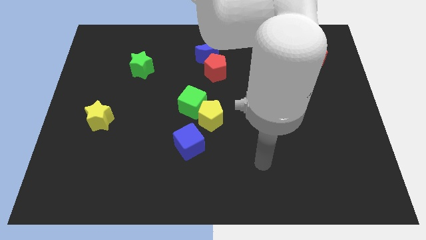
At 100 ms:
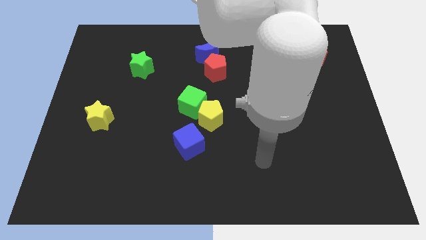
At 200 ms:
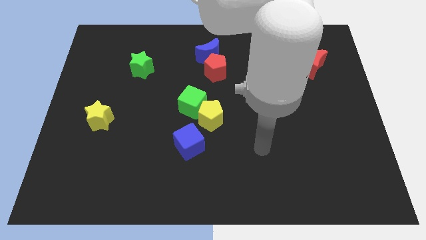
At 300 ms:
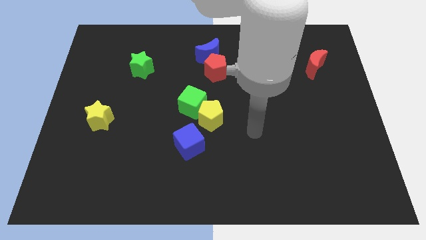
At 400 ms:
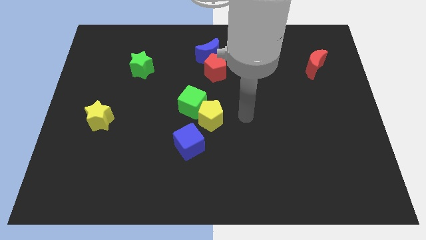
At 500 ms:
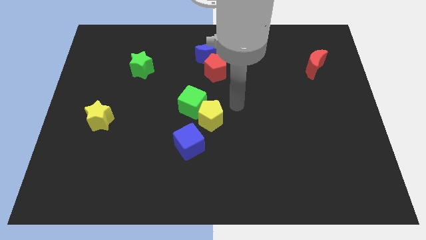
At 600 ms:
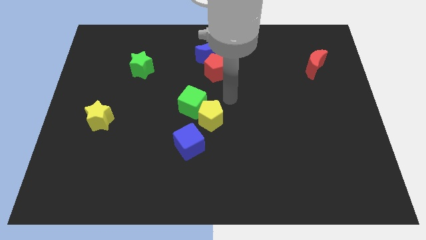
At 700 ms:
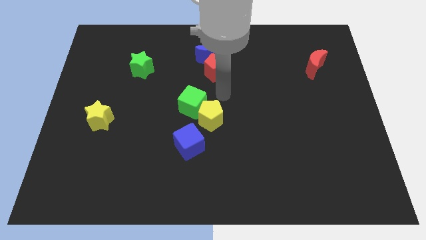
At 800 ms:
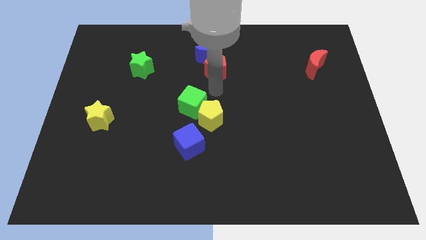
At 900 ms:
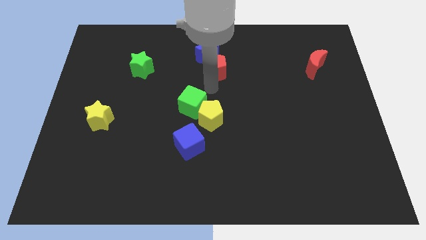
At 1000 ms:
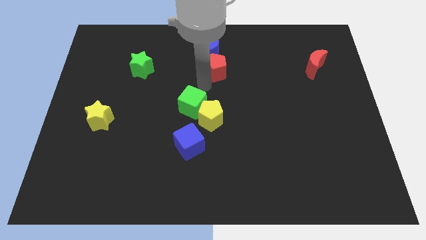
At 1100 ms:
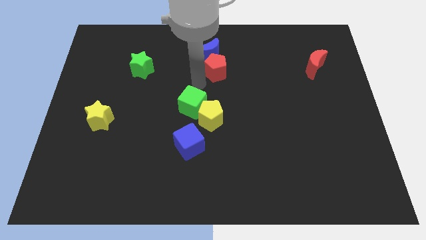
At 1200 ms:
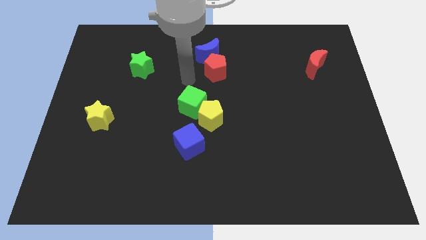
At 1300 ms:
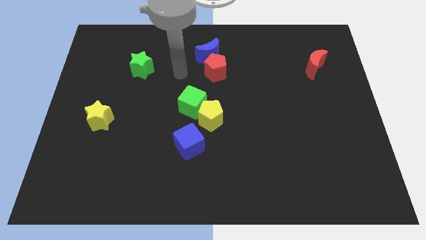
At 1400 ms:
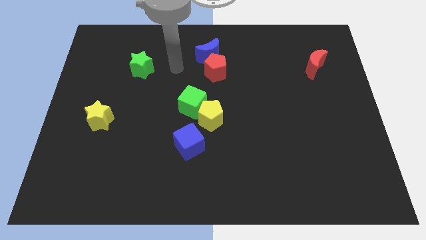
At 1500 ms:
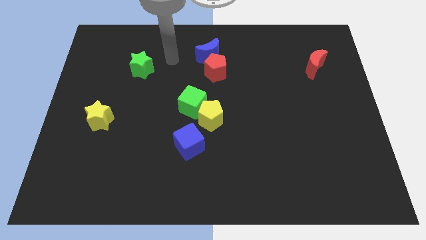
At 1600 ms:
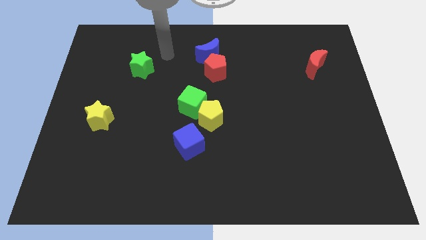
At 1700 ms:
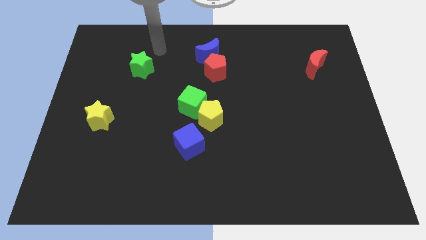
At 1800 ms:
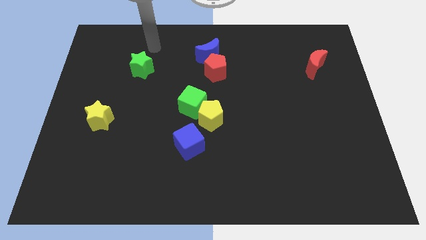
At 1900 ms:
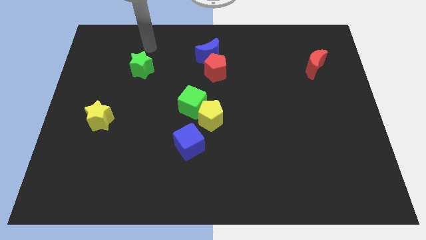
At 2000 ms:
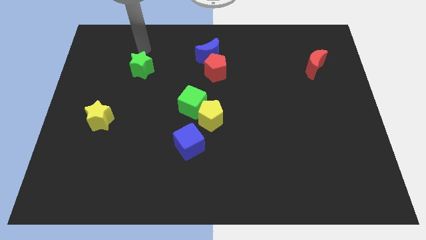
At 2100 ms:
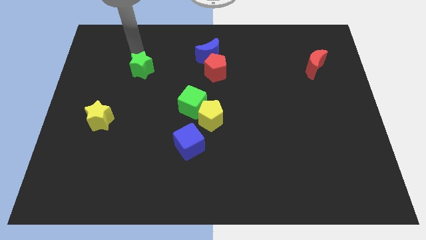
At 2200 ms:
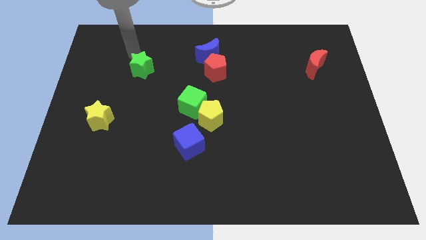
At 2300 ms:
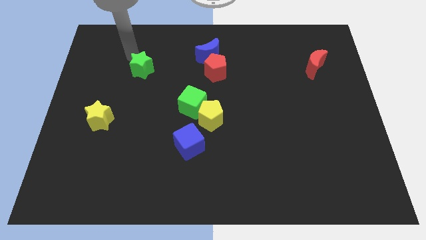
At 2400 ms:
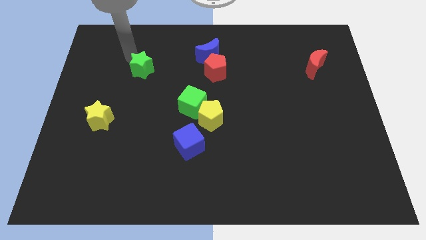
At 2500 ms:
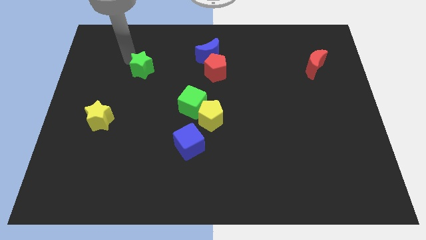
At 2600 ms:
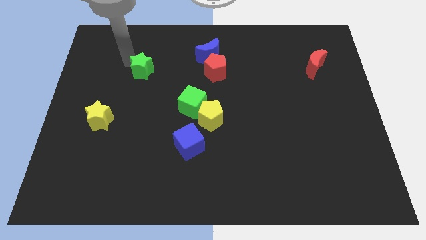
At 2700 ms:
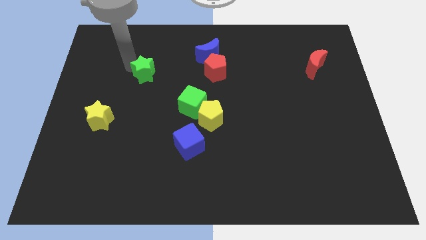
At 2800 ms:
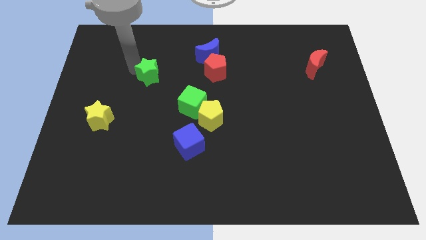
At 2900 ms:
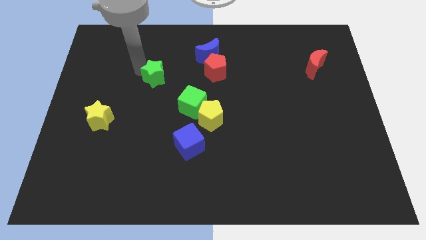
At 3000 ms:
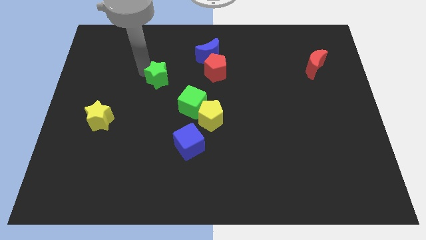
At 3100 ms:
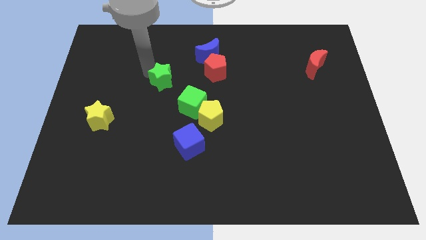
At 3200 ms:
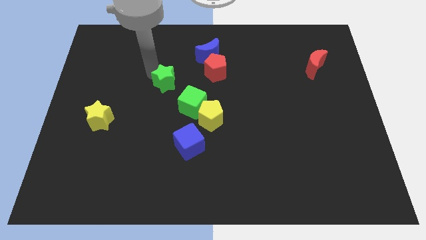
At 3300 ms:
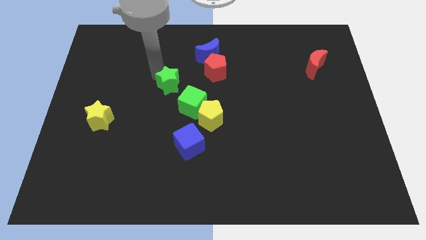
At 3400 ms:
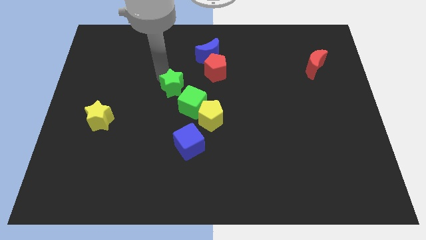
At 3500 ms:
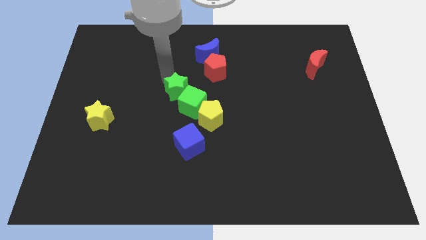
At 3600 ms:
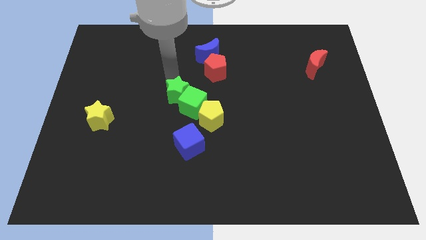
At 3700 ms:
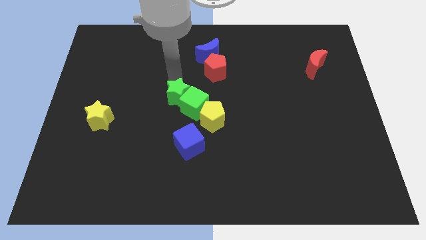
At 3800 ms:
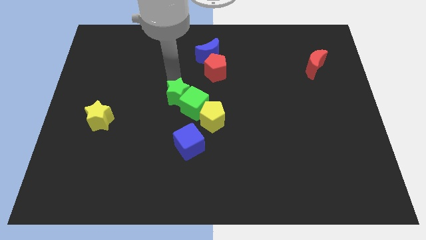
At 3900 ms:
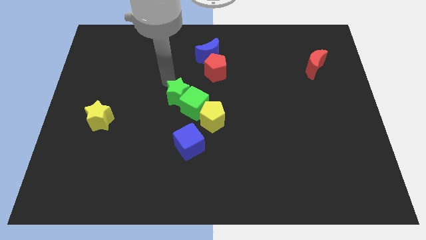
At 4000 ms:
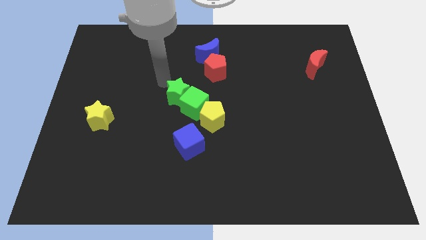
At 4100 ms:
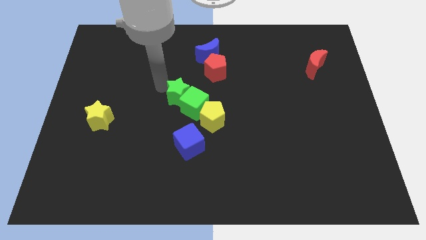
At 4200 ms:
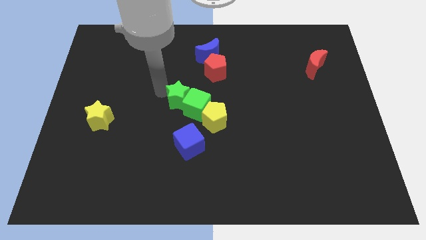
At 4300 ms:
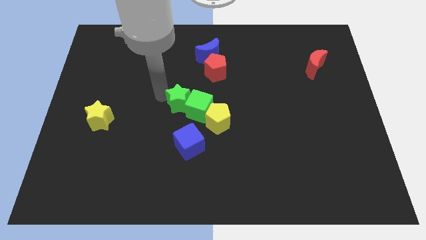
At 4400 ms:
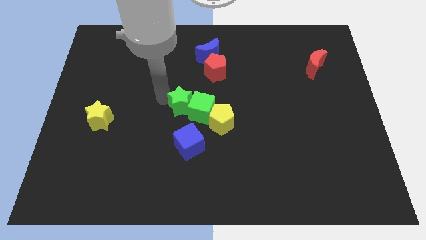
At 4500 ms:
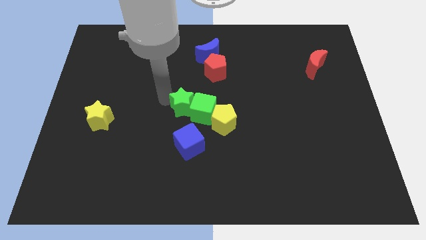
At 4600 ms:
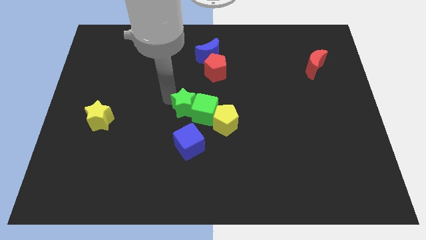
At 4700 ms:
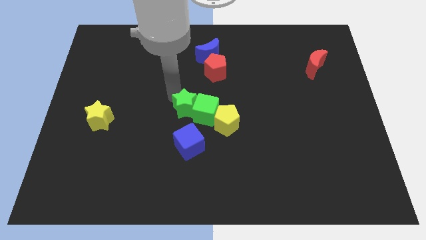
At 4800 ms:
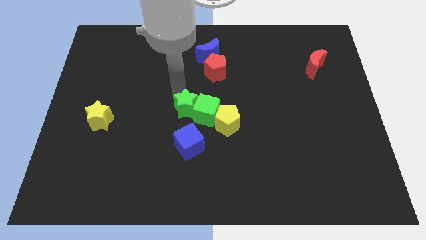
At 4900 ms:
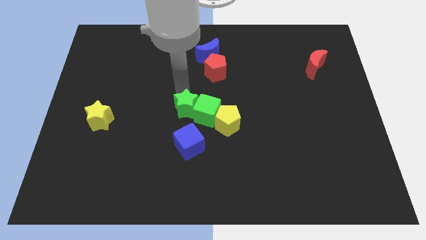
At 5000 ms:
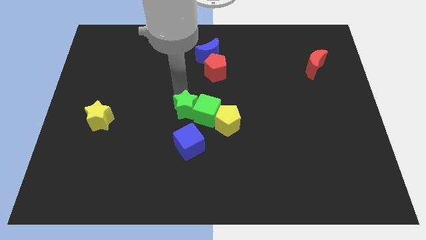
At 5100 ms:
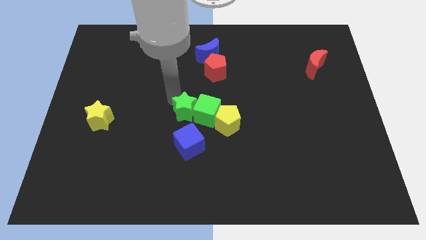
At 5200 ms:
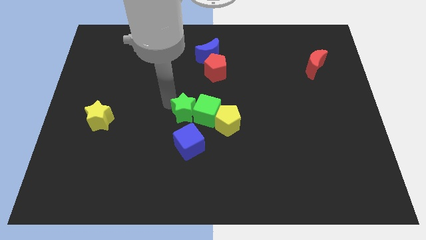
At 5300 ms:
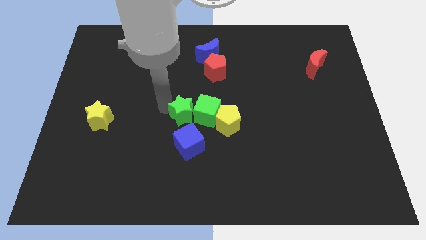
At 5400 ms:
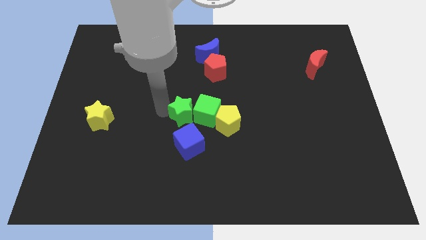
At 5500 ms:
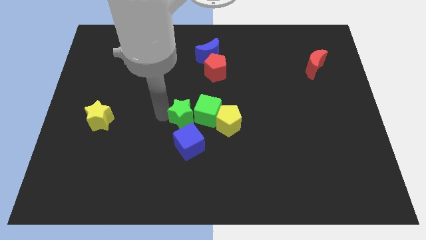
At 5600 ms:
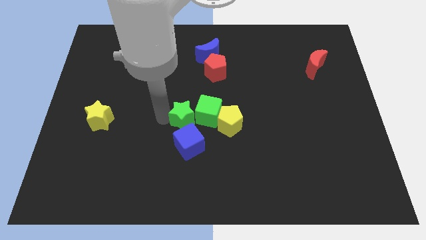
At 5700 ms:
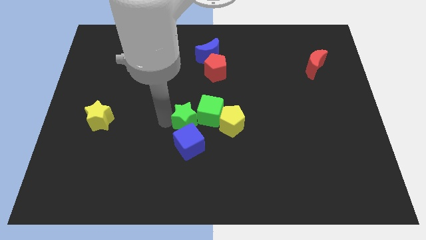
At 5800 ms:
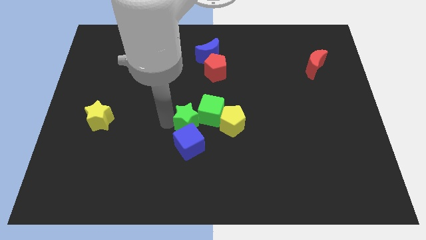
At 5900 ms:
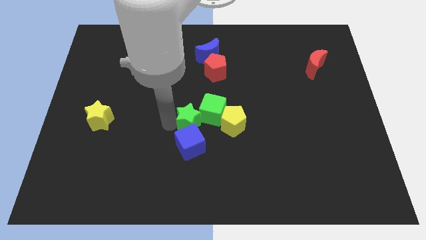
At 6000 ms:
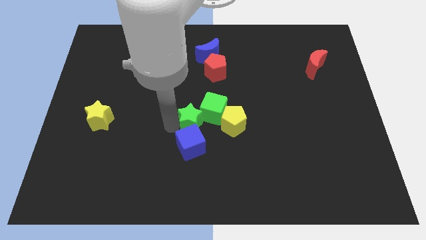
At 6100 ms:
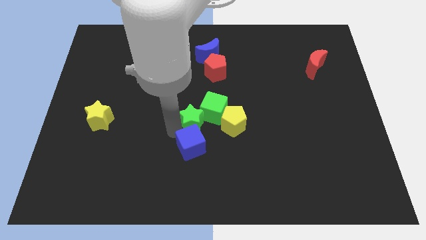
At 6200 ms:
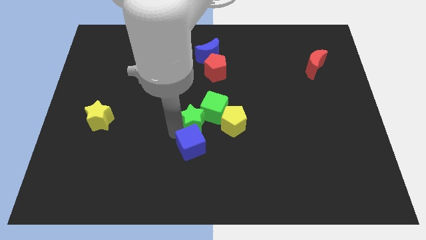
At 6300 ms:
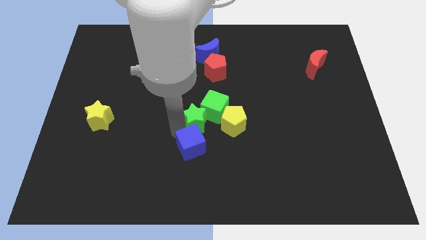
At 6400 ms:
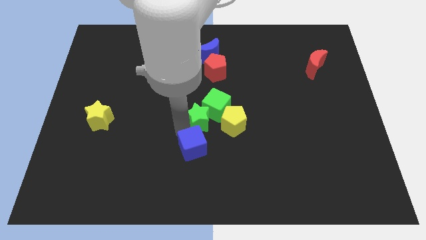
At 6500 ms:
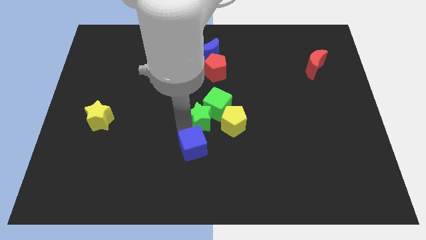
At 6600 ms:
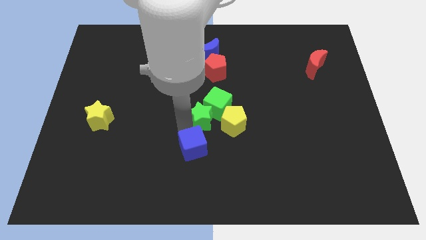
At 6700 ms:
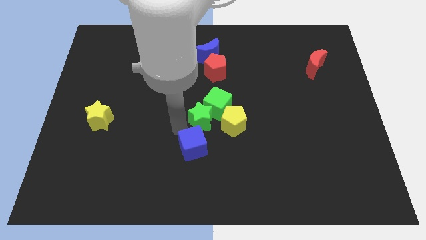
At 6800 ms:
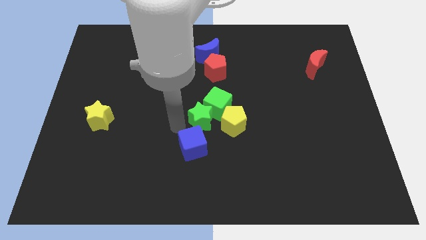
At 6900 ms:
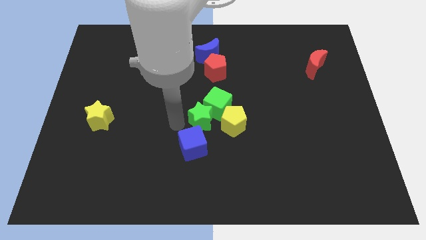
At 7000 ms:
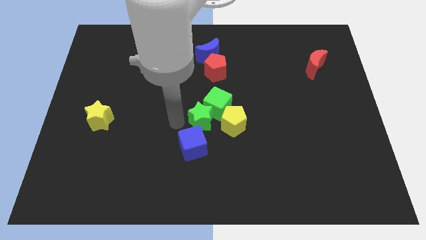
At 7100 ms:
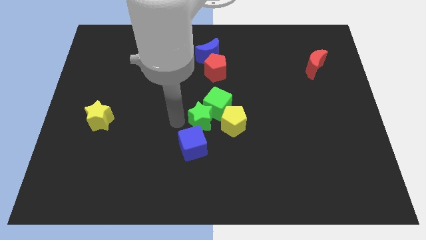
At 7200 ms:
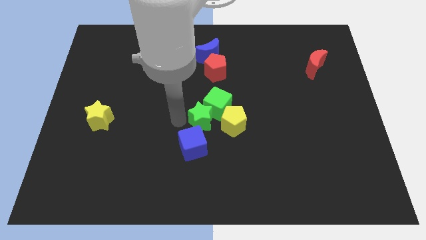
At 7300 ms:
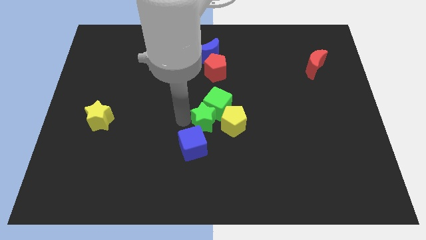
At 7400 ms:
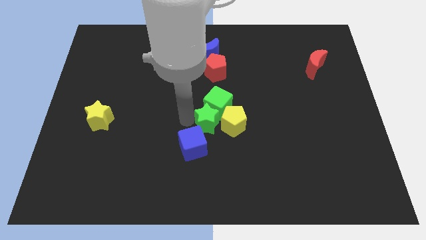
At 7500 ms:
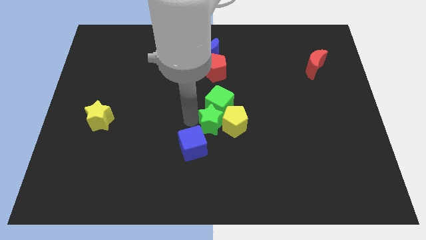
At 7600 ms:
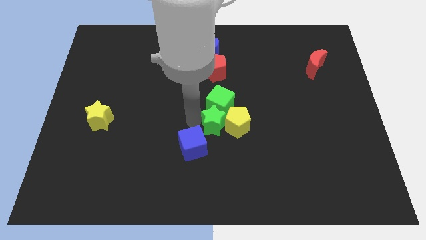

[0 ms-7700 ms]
push the green star next to the yellow pentagon

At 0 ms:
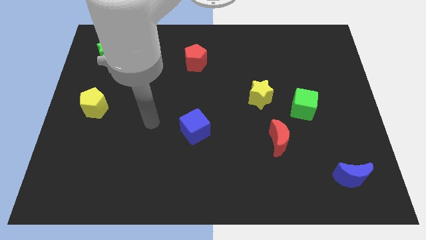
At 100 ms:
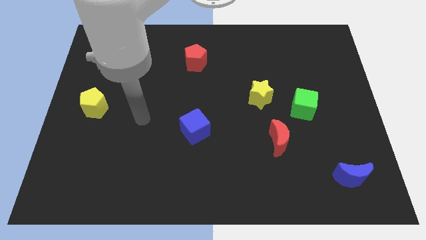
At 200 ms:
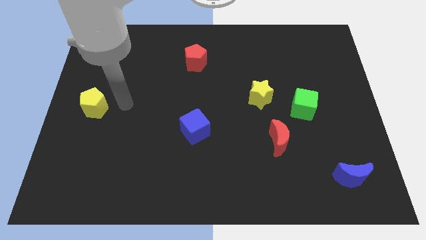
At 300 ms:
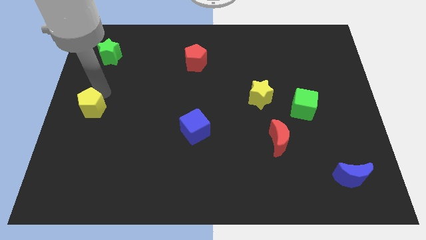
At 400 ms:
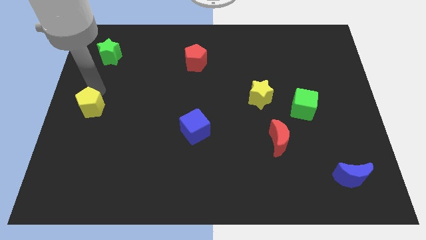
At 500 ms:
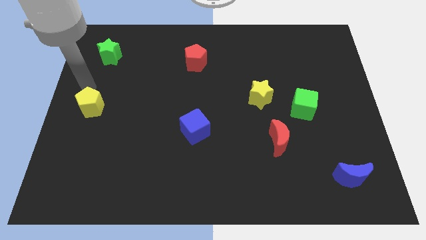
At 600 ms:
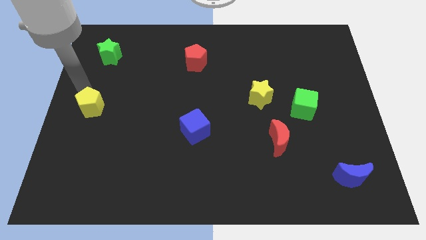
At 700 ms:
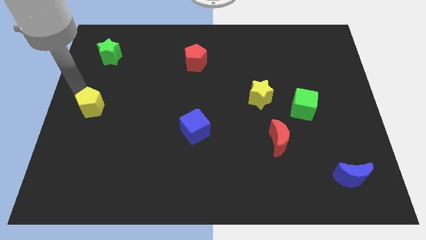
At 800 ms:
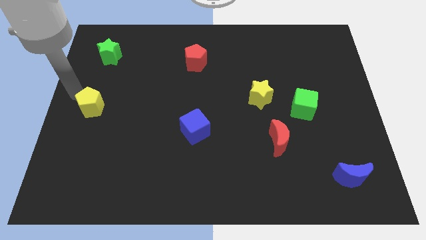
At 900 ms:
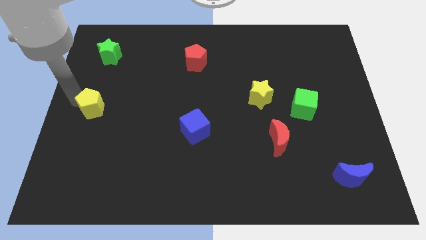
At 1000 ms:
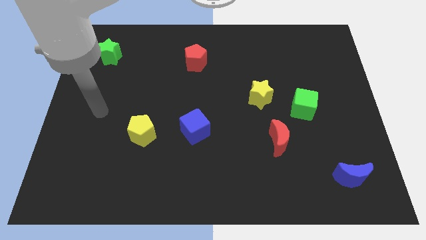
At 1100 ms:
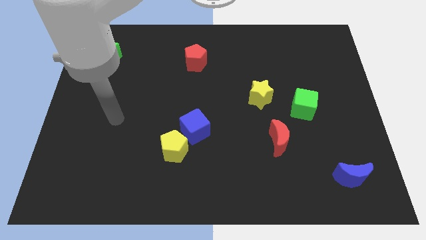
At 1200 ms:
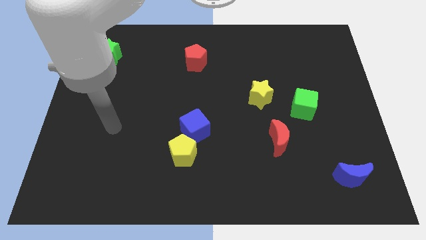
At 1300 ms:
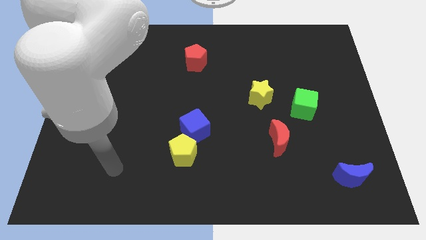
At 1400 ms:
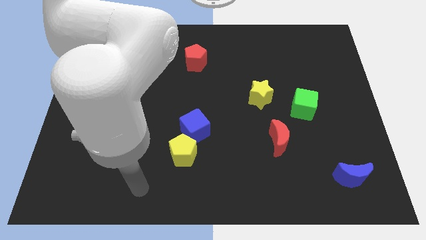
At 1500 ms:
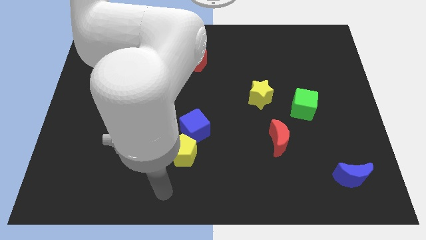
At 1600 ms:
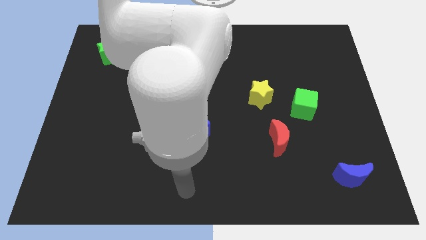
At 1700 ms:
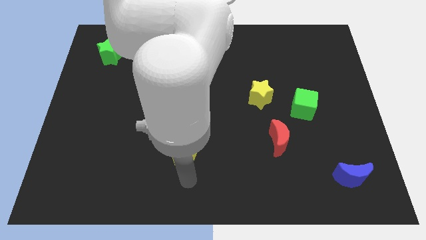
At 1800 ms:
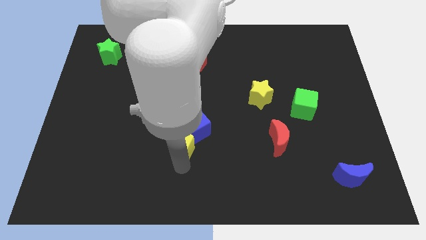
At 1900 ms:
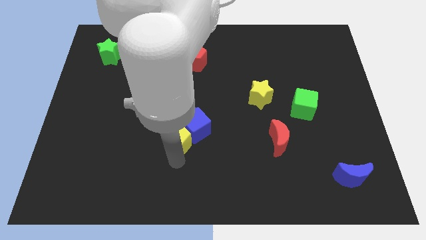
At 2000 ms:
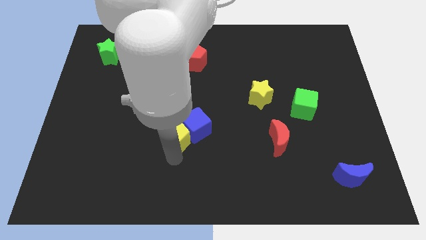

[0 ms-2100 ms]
move the yellow pentagon towards the blue cube
